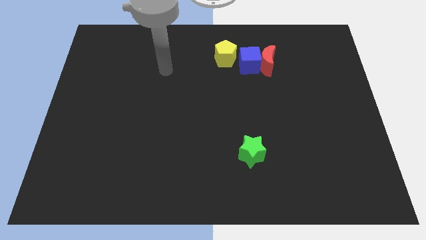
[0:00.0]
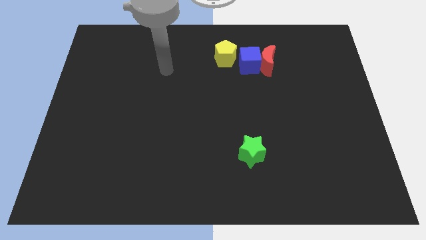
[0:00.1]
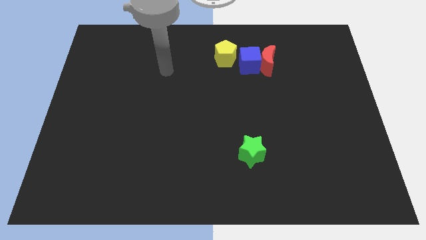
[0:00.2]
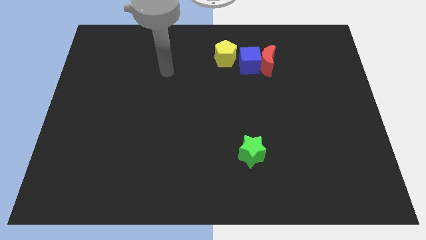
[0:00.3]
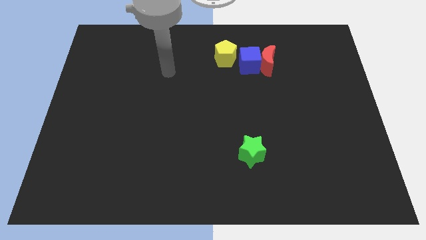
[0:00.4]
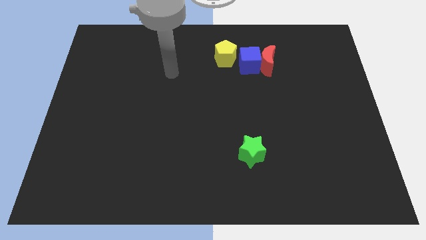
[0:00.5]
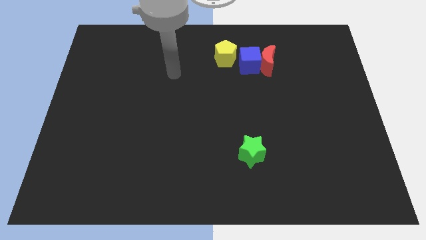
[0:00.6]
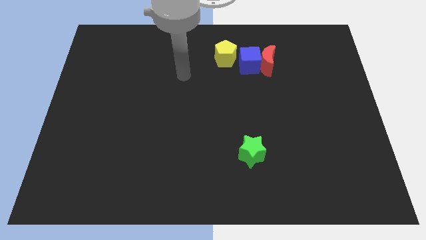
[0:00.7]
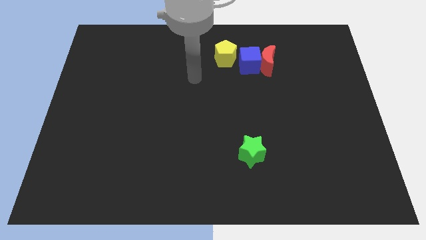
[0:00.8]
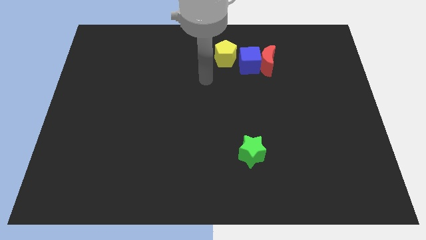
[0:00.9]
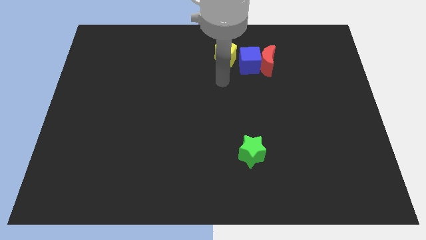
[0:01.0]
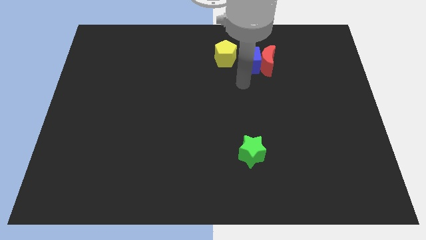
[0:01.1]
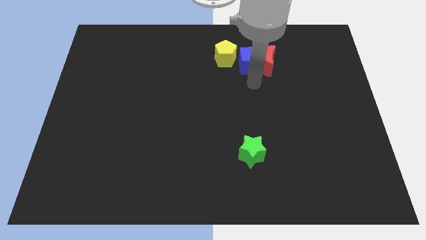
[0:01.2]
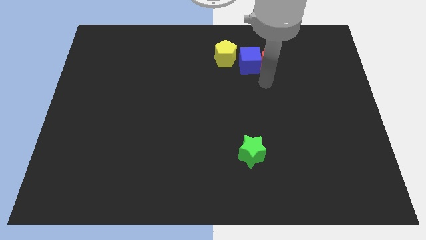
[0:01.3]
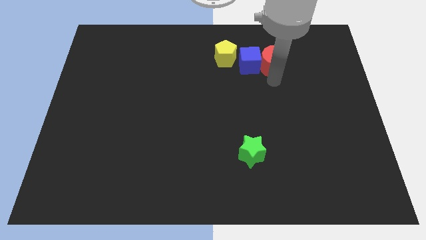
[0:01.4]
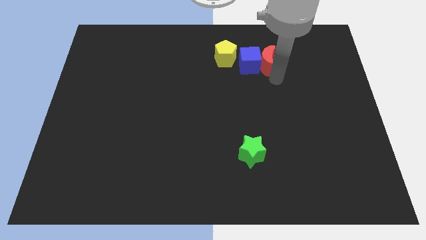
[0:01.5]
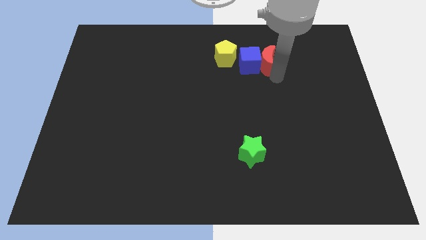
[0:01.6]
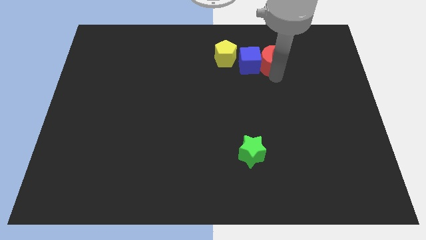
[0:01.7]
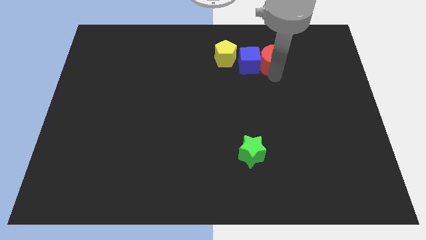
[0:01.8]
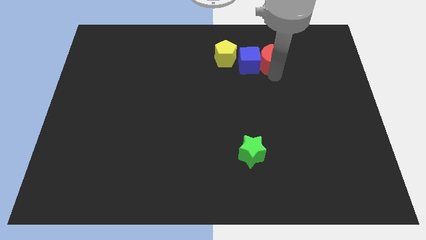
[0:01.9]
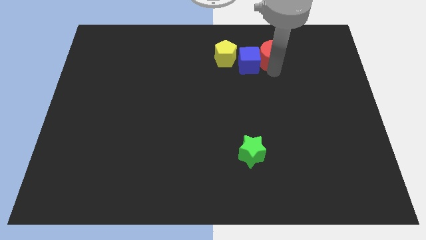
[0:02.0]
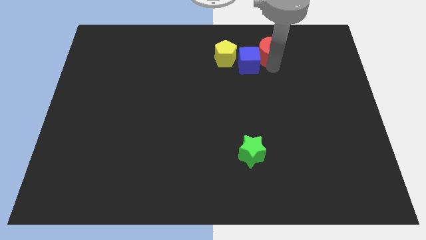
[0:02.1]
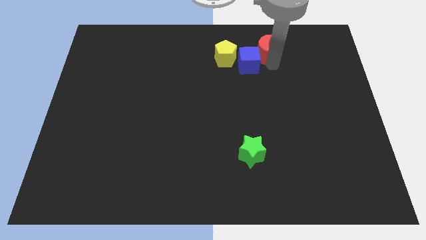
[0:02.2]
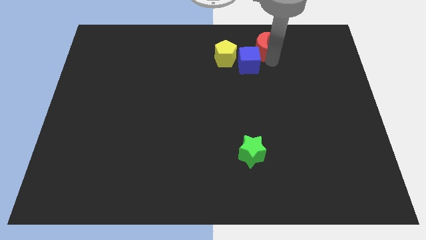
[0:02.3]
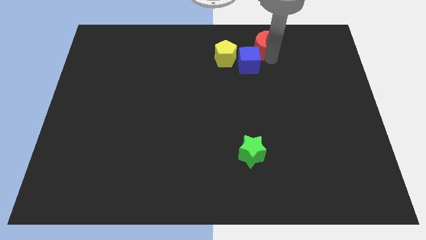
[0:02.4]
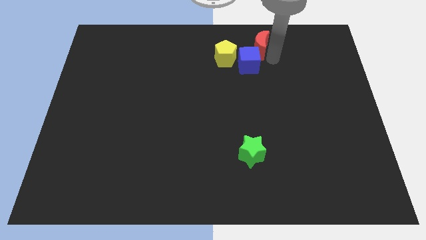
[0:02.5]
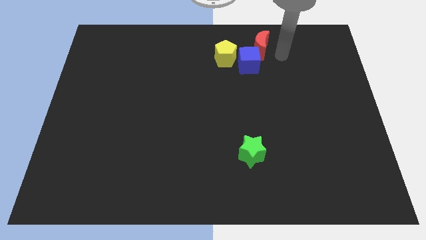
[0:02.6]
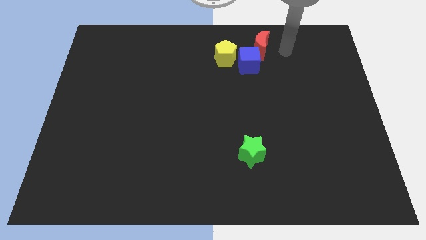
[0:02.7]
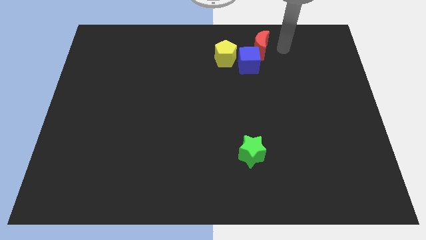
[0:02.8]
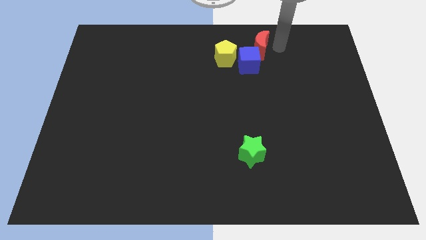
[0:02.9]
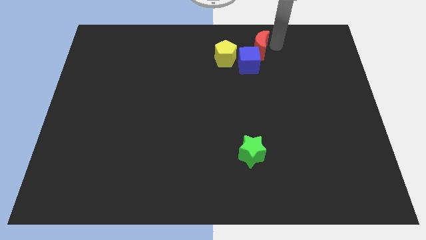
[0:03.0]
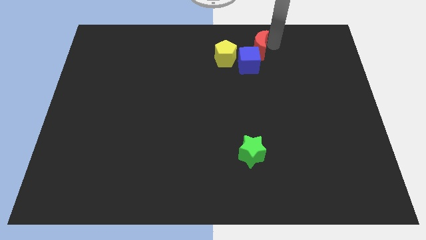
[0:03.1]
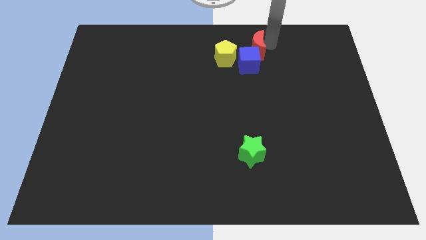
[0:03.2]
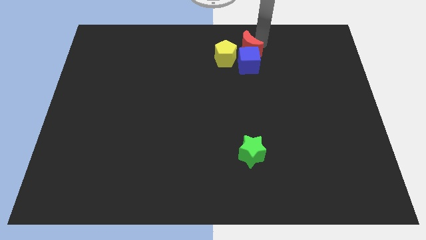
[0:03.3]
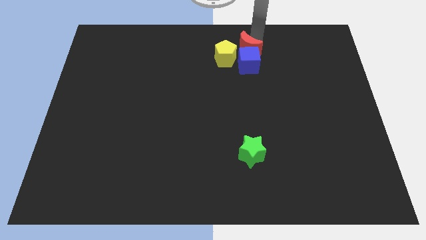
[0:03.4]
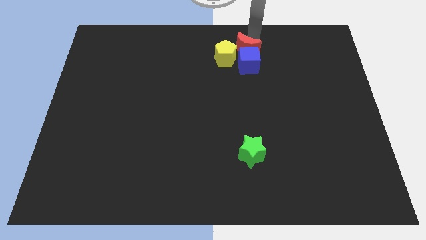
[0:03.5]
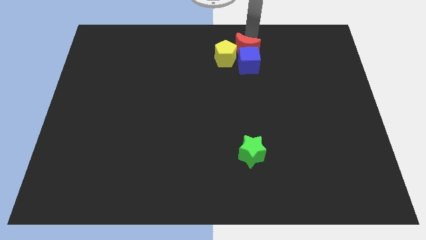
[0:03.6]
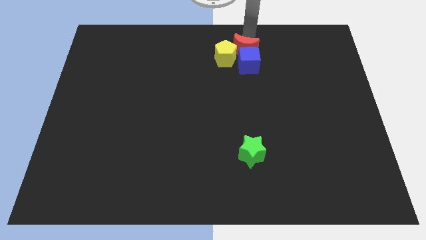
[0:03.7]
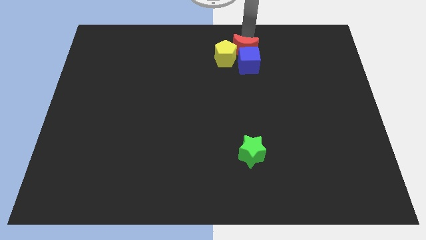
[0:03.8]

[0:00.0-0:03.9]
move the red moon towards the pentagon

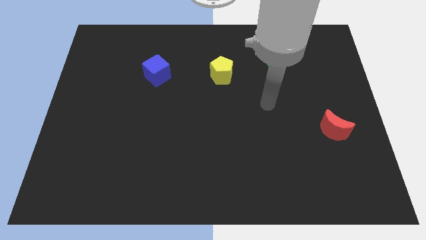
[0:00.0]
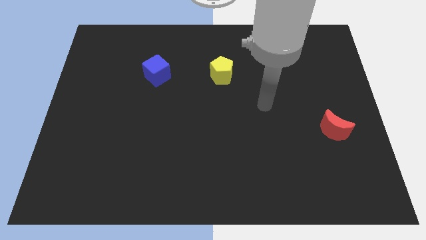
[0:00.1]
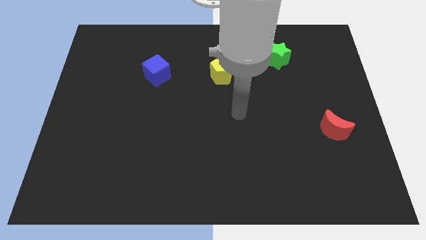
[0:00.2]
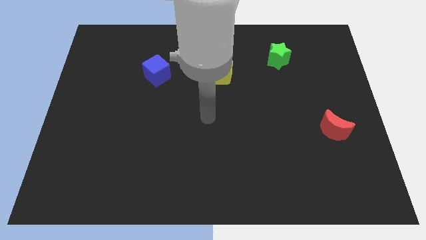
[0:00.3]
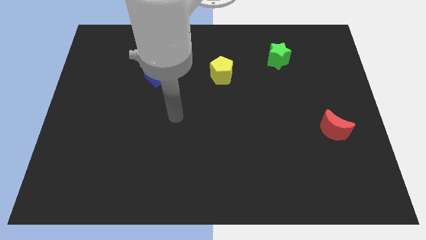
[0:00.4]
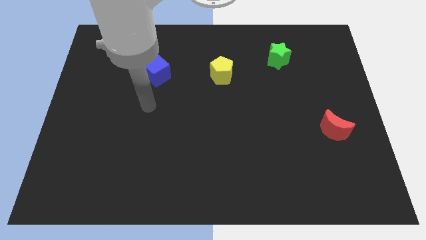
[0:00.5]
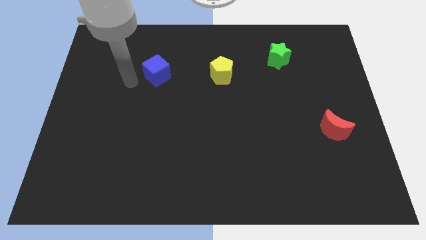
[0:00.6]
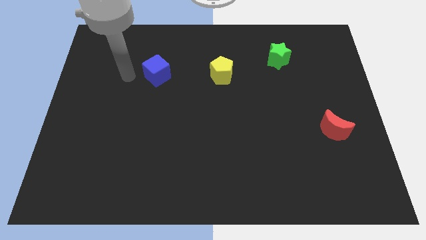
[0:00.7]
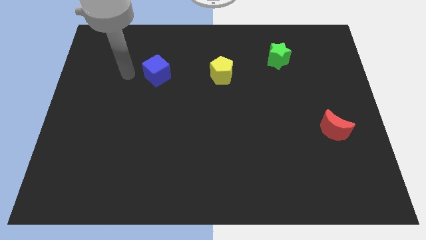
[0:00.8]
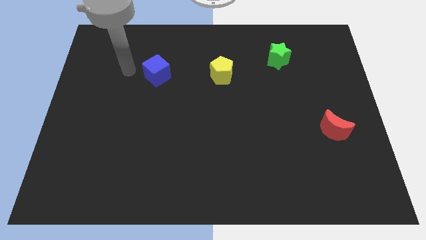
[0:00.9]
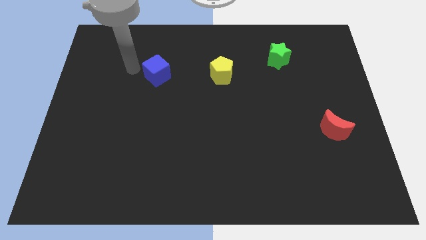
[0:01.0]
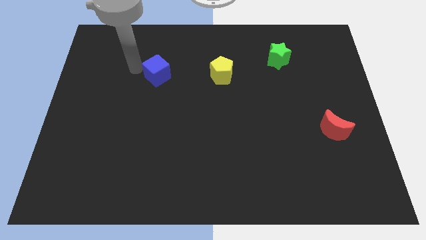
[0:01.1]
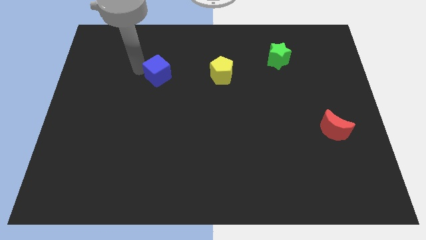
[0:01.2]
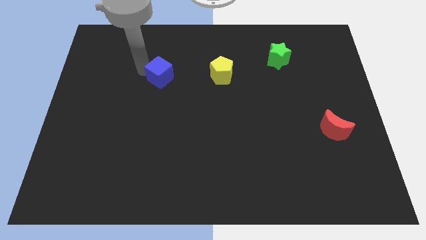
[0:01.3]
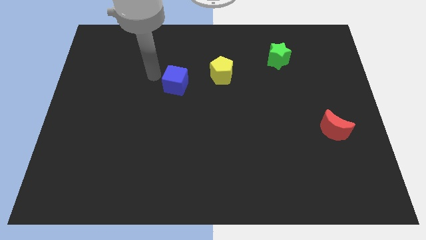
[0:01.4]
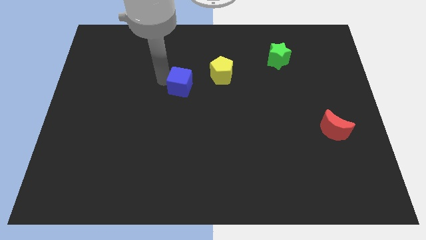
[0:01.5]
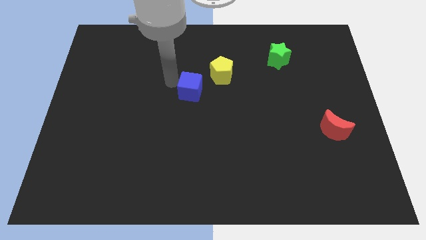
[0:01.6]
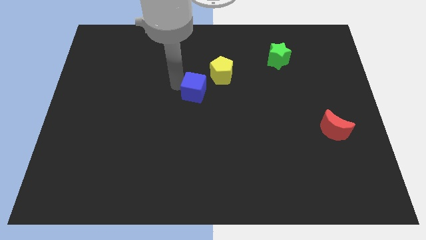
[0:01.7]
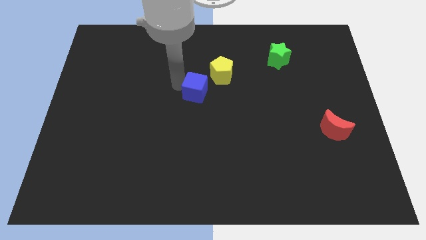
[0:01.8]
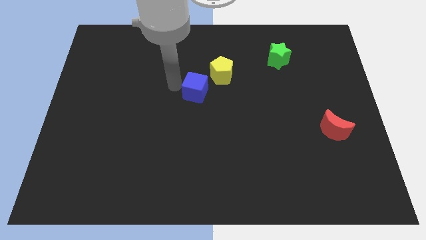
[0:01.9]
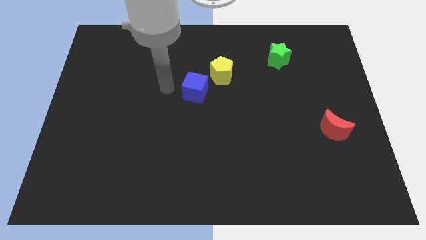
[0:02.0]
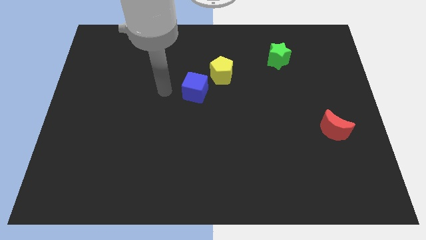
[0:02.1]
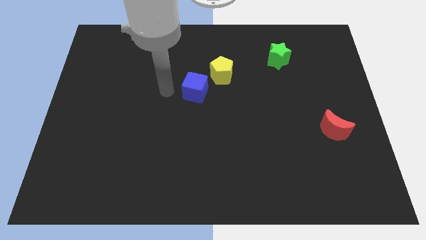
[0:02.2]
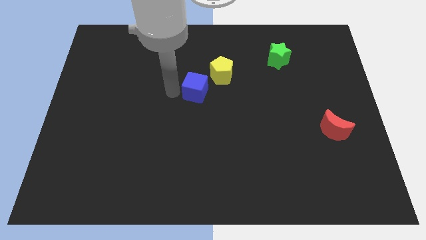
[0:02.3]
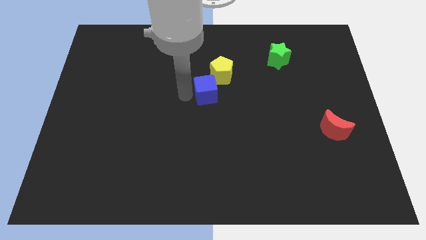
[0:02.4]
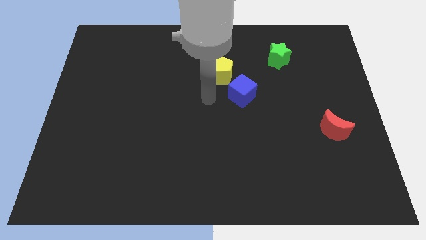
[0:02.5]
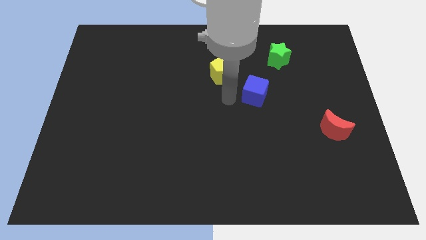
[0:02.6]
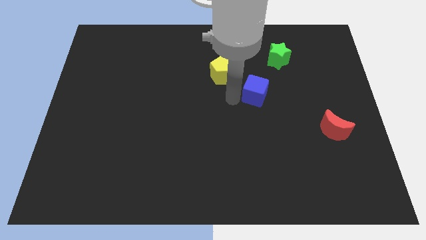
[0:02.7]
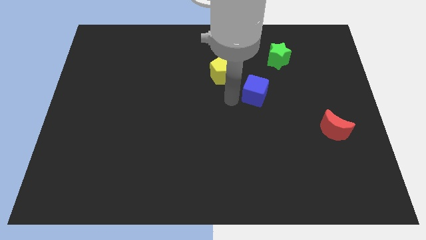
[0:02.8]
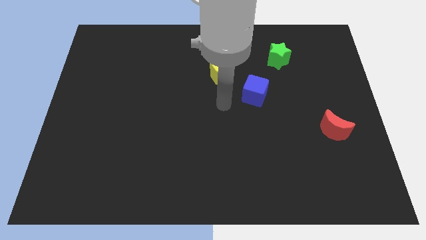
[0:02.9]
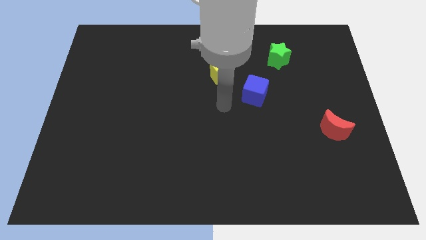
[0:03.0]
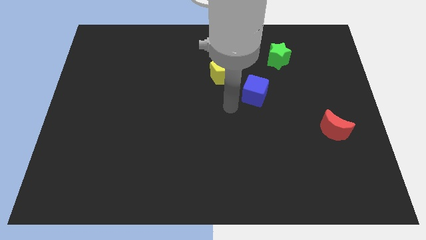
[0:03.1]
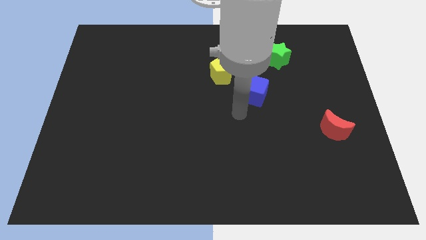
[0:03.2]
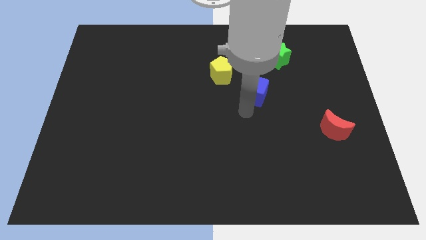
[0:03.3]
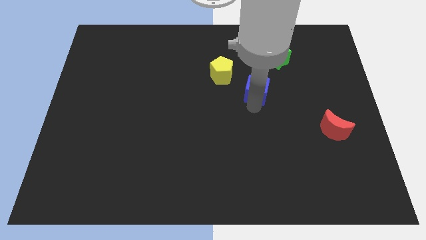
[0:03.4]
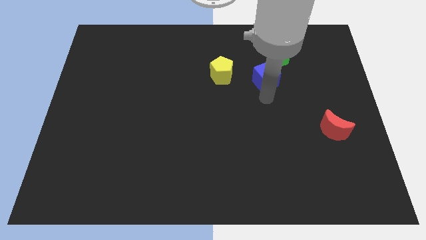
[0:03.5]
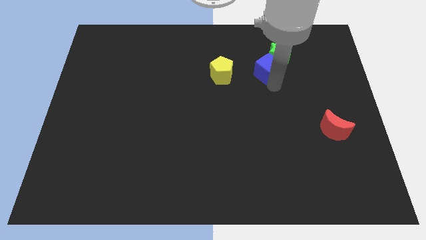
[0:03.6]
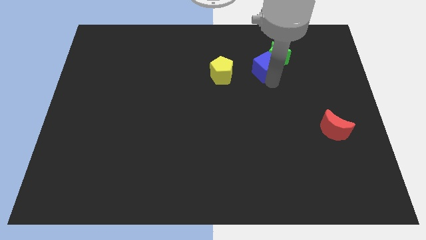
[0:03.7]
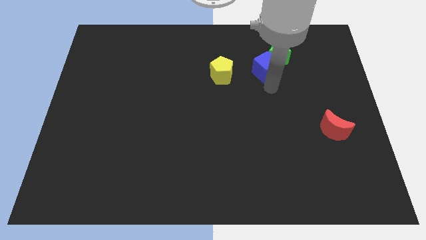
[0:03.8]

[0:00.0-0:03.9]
slide the cube to the star
